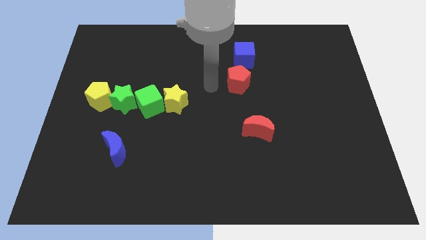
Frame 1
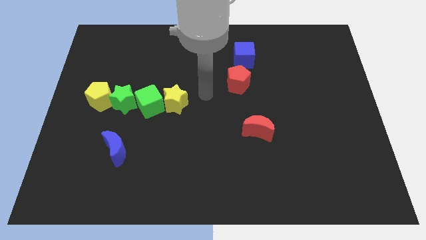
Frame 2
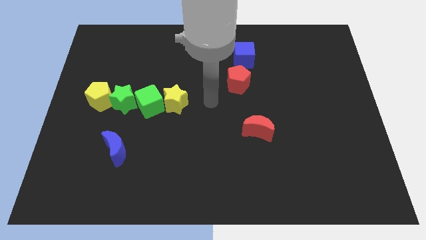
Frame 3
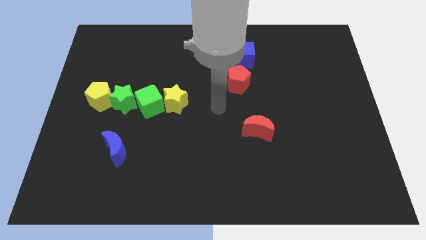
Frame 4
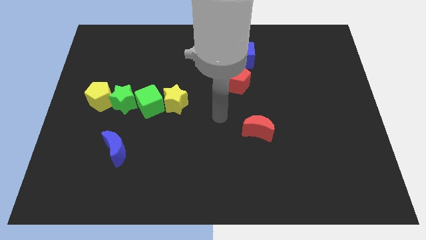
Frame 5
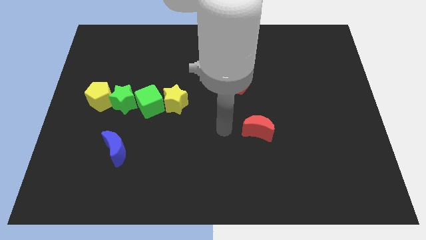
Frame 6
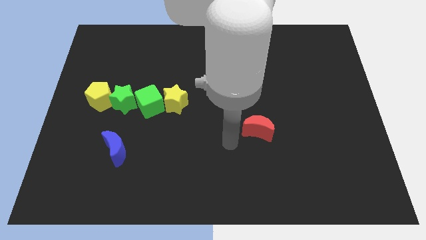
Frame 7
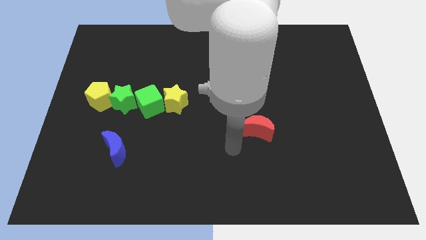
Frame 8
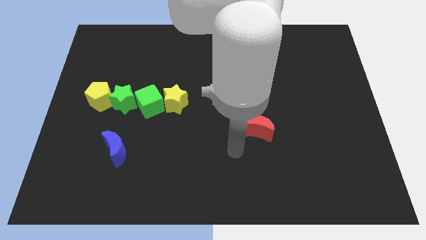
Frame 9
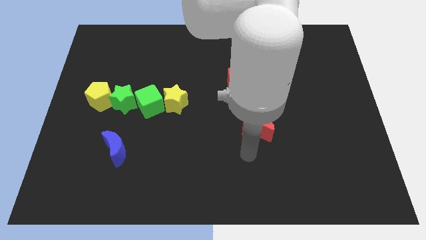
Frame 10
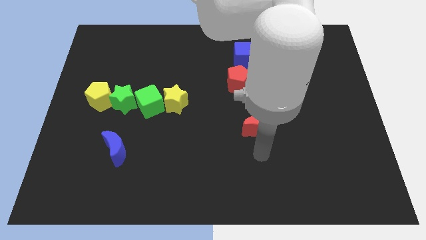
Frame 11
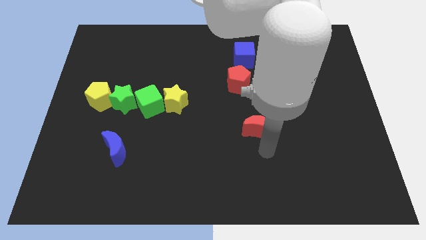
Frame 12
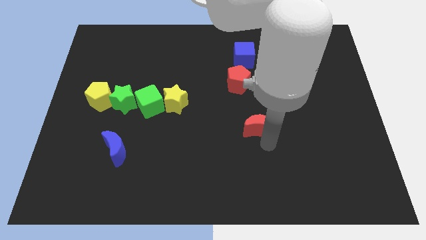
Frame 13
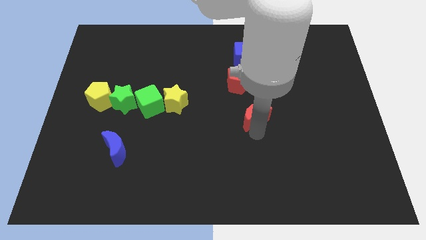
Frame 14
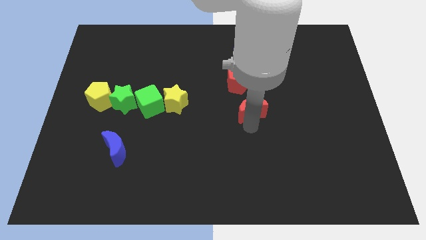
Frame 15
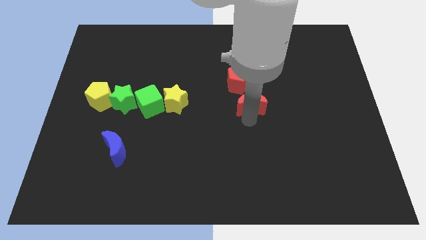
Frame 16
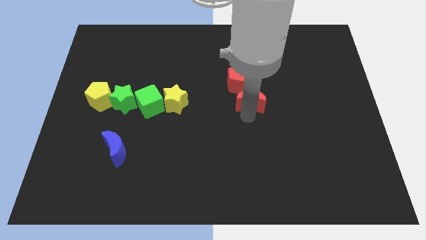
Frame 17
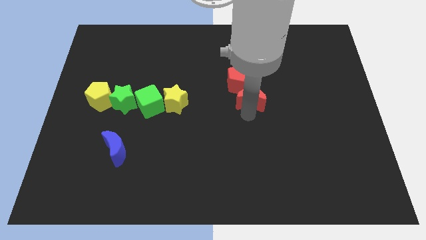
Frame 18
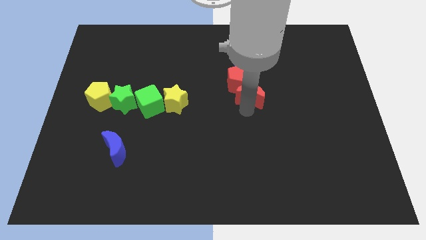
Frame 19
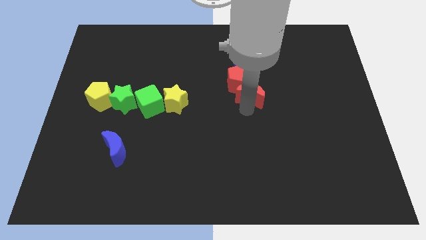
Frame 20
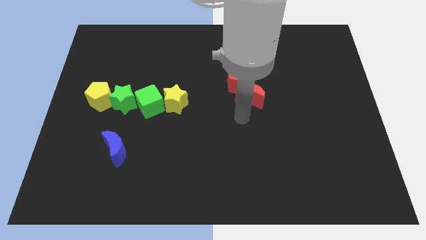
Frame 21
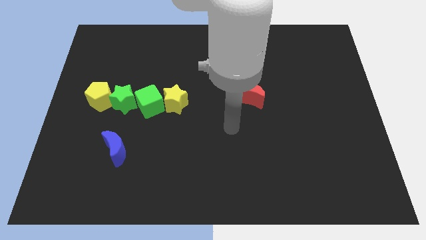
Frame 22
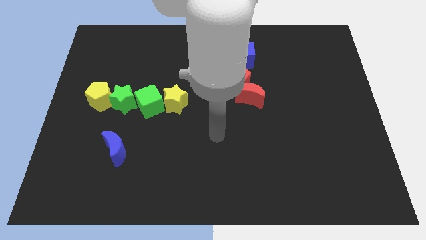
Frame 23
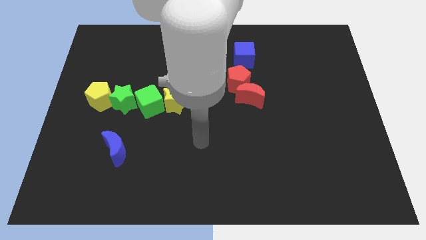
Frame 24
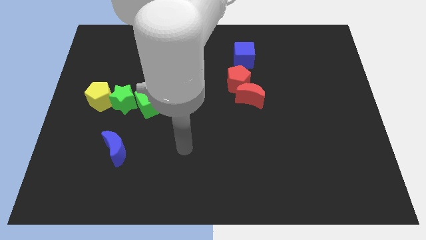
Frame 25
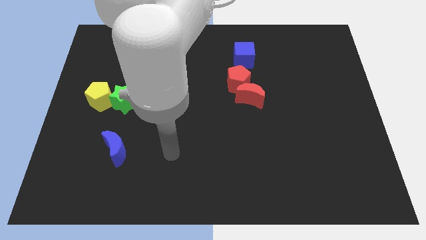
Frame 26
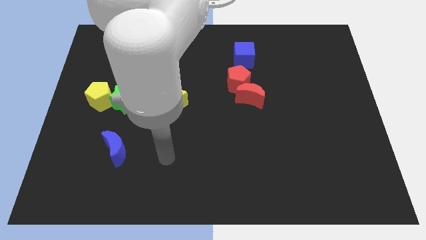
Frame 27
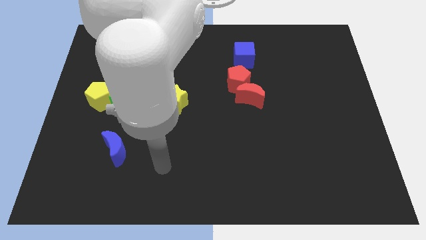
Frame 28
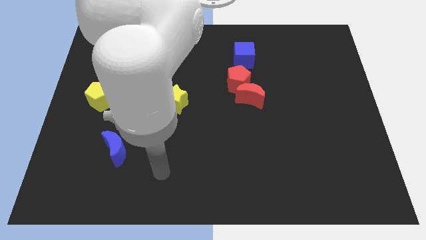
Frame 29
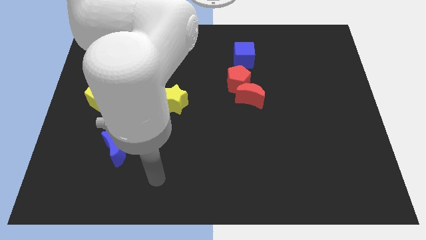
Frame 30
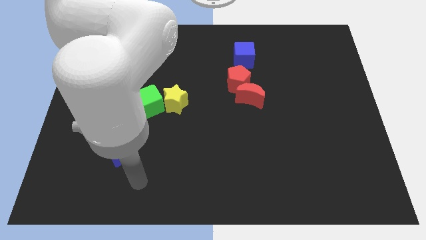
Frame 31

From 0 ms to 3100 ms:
push the red moon to the red pentagon

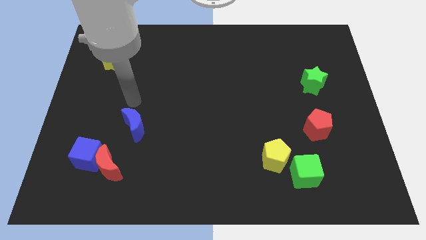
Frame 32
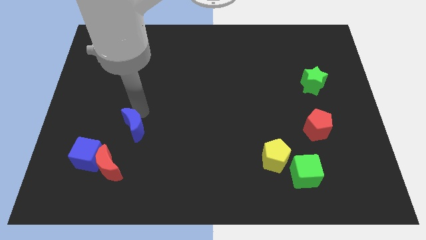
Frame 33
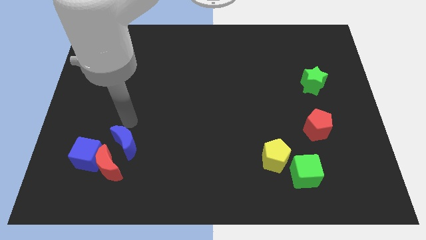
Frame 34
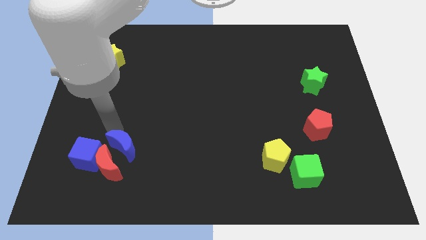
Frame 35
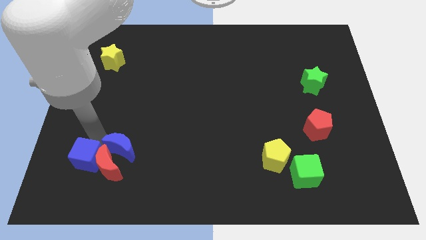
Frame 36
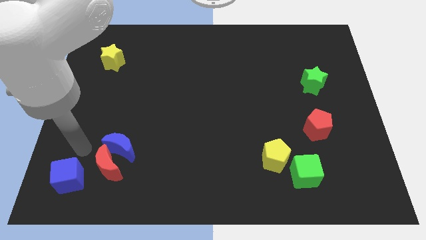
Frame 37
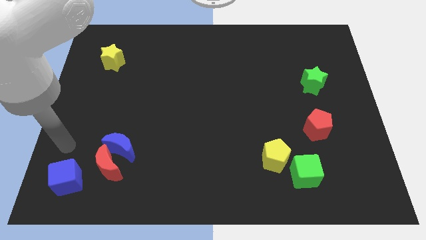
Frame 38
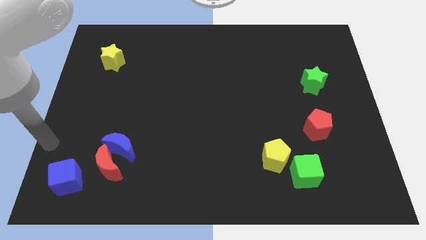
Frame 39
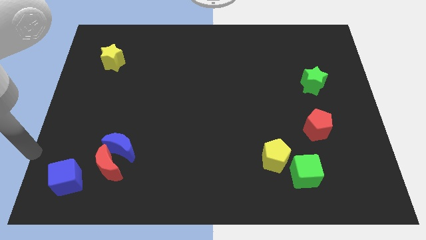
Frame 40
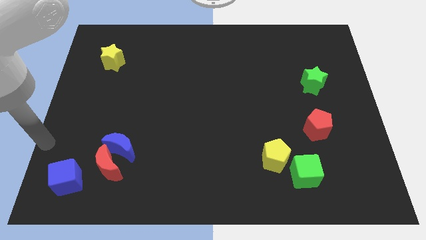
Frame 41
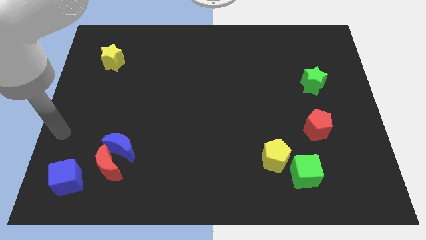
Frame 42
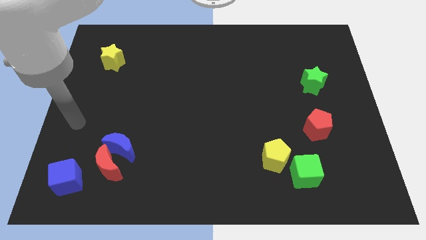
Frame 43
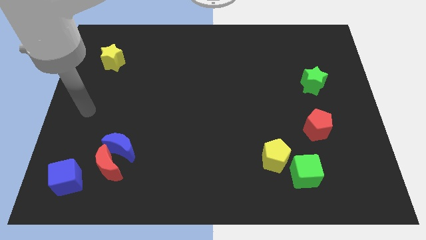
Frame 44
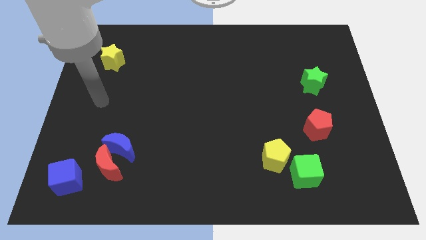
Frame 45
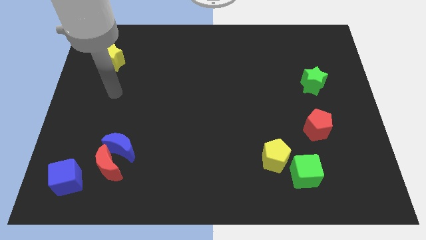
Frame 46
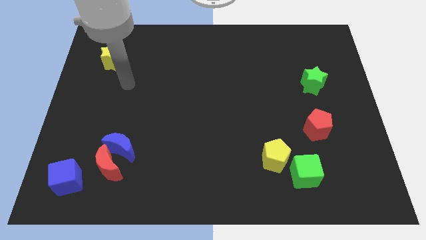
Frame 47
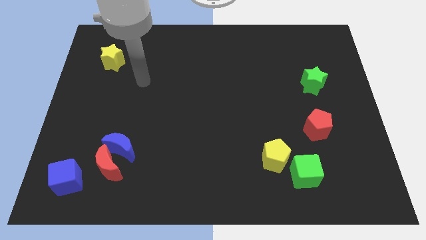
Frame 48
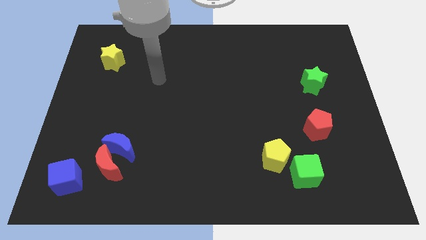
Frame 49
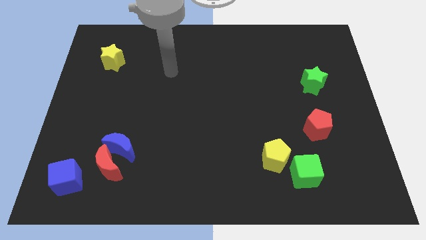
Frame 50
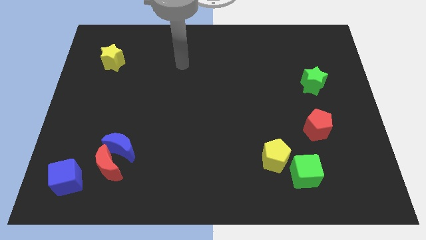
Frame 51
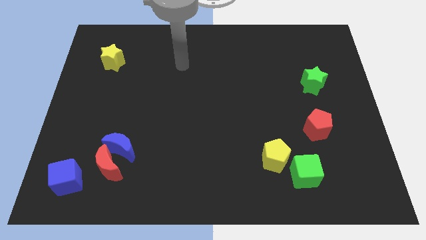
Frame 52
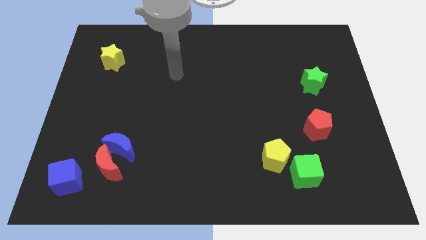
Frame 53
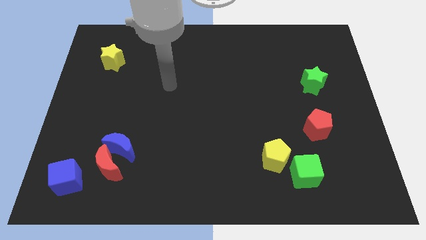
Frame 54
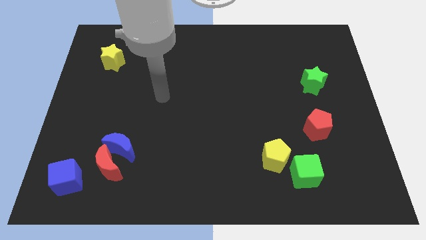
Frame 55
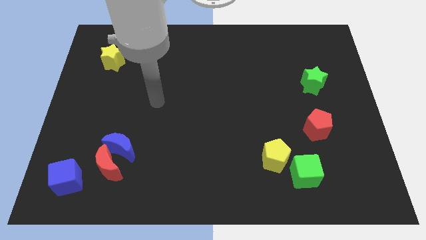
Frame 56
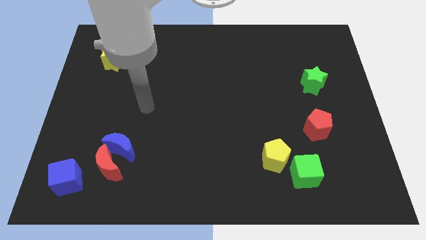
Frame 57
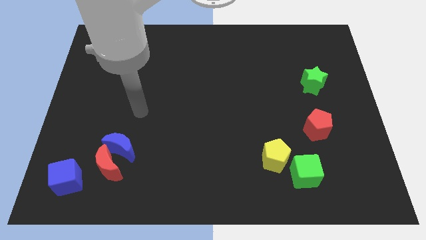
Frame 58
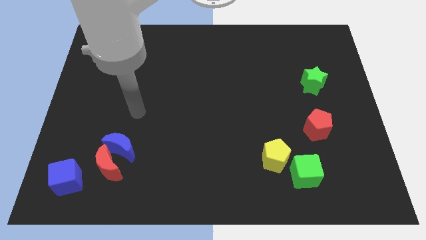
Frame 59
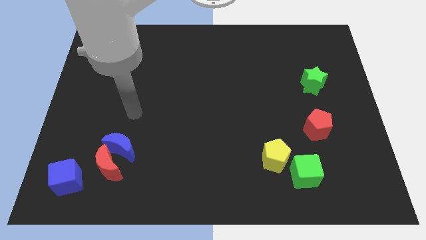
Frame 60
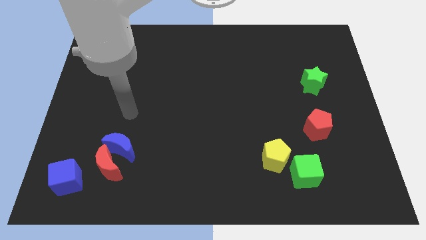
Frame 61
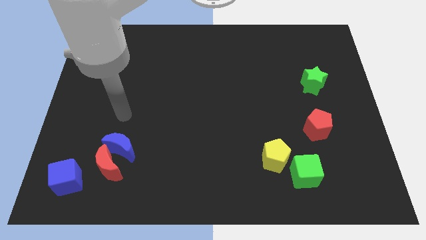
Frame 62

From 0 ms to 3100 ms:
push the blue cube and blue crescent slightly downwards

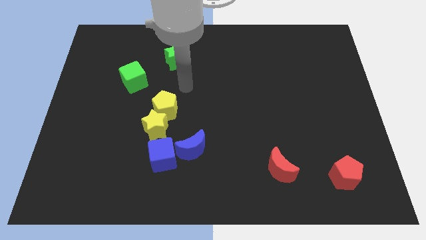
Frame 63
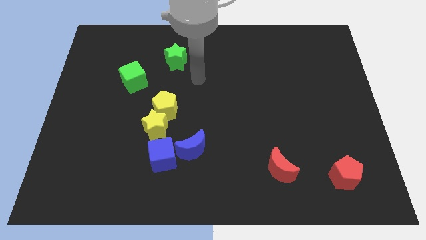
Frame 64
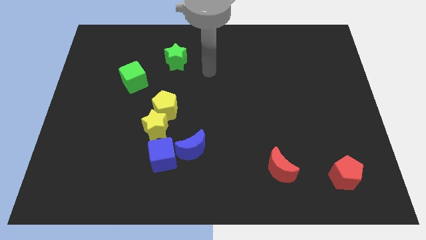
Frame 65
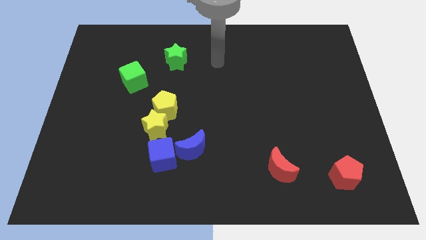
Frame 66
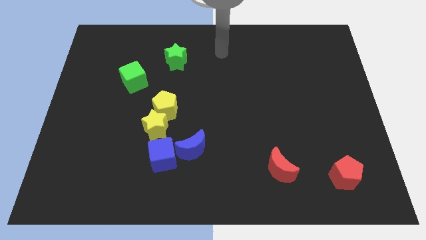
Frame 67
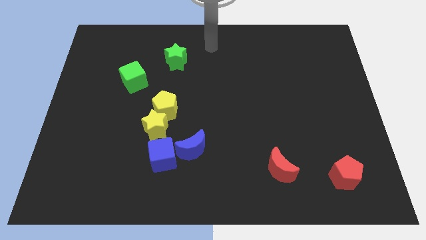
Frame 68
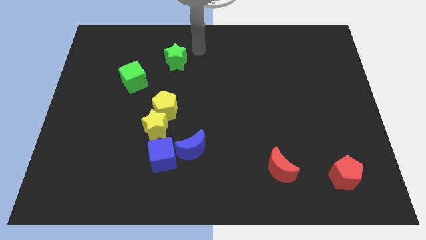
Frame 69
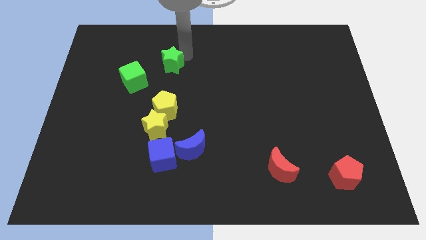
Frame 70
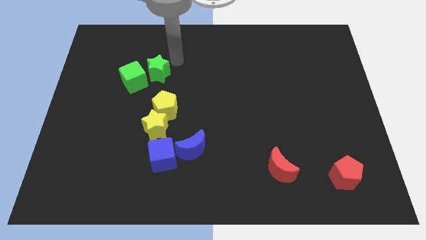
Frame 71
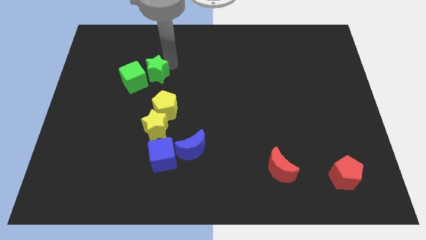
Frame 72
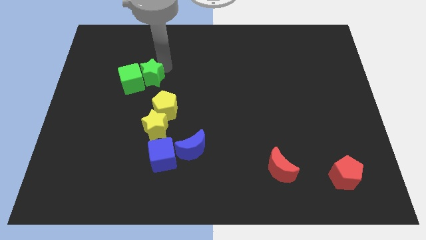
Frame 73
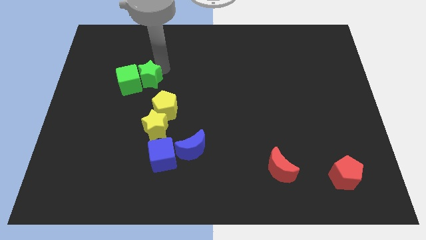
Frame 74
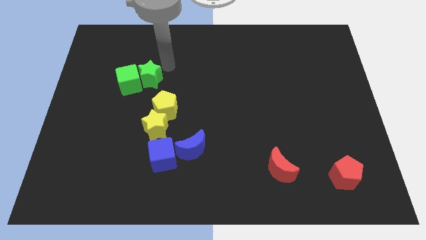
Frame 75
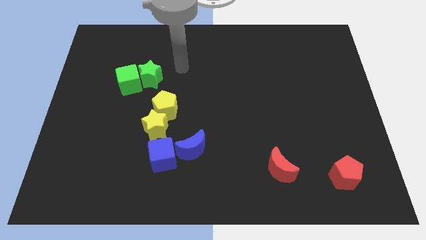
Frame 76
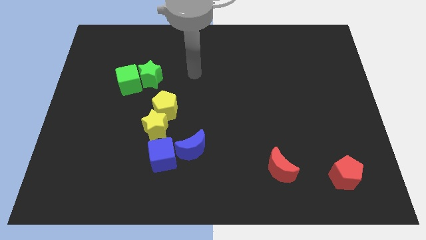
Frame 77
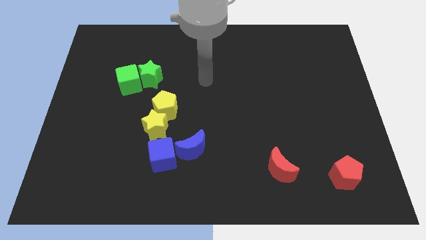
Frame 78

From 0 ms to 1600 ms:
push the green star into the right side of the green cube

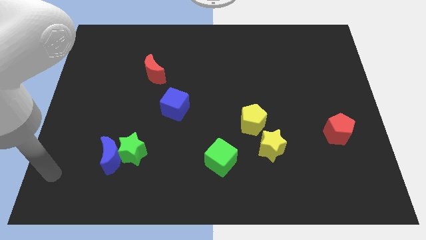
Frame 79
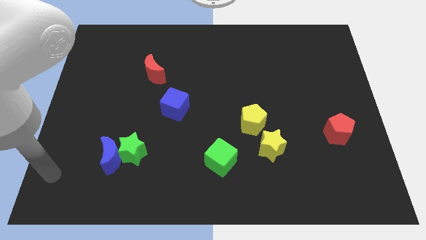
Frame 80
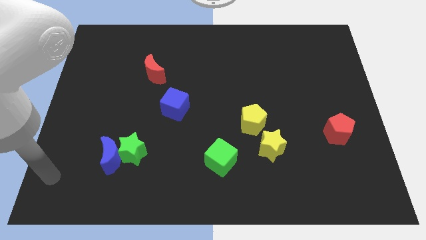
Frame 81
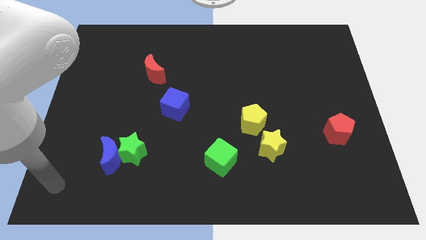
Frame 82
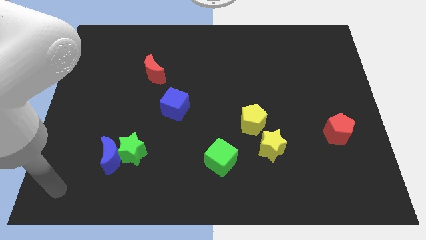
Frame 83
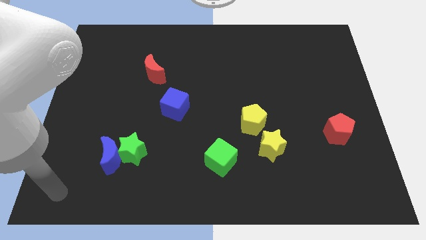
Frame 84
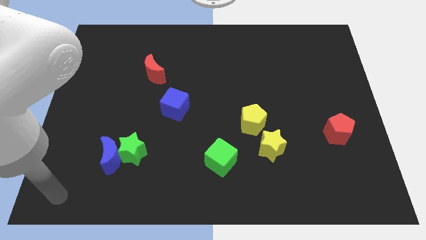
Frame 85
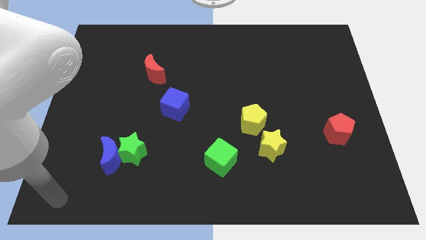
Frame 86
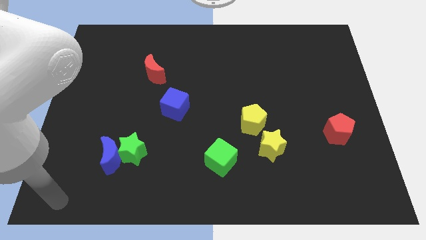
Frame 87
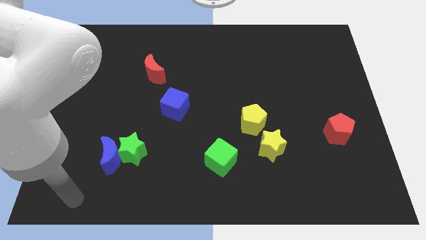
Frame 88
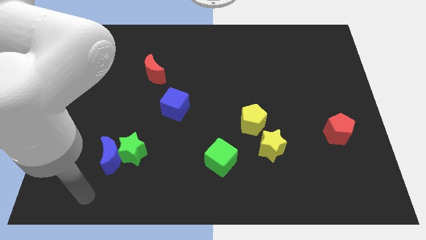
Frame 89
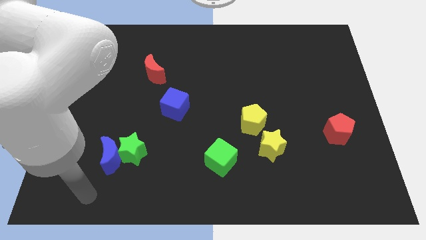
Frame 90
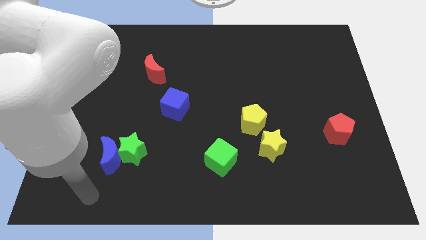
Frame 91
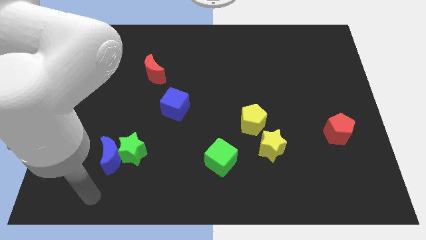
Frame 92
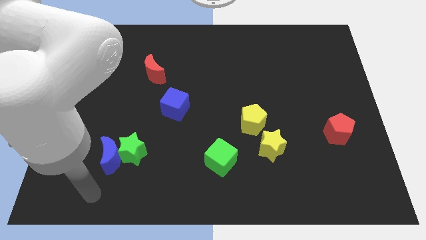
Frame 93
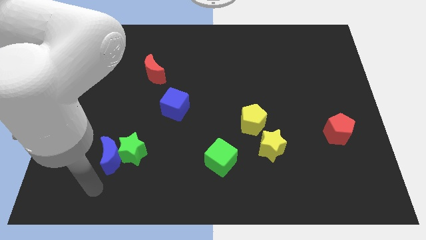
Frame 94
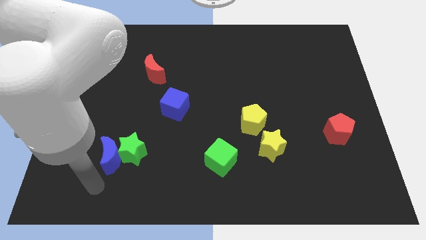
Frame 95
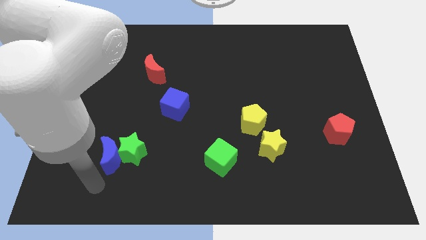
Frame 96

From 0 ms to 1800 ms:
move the arm to the bottom of the blue crescent
